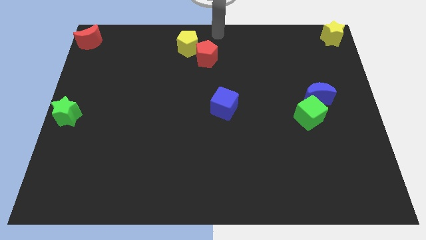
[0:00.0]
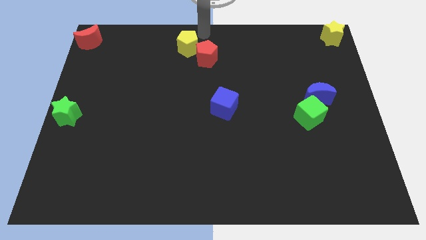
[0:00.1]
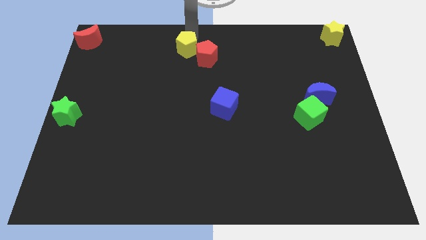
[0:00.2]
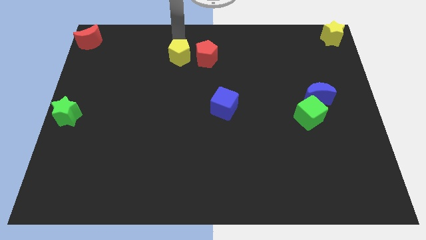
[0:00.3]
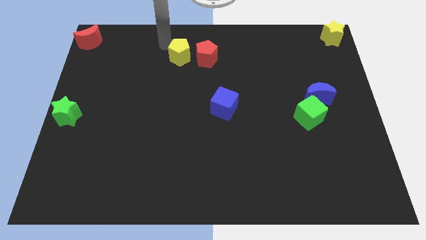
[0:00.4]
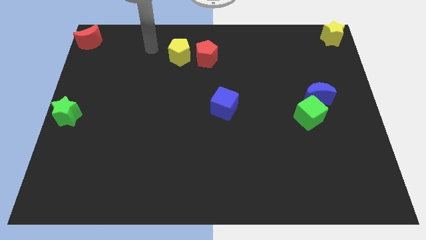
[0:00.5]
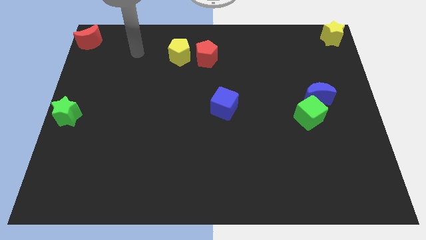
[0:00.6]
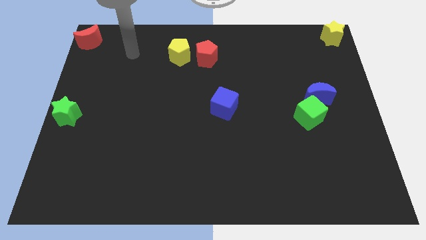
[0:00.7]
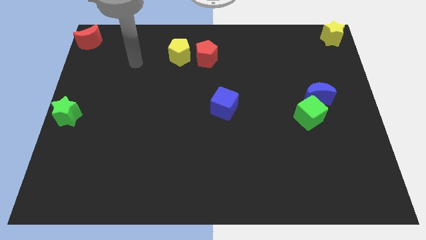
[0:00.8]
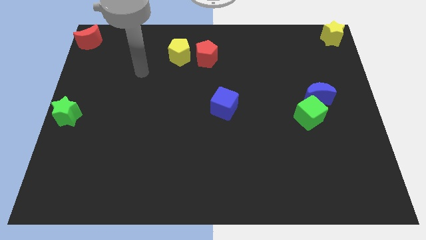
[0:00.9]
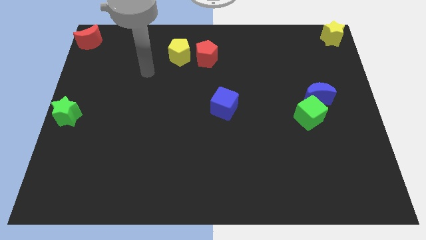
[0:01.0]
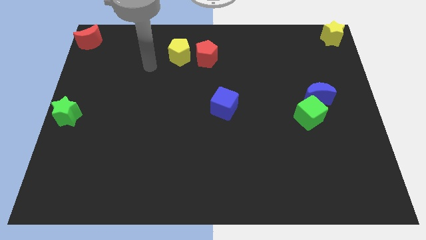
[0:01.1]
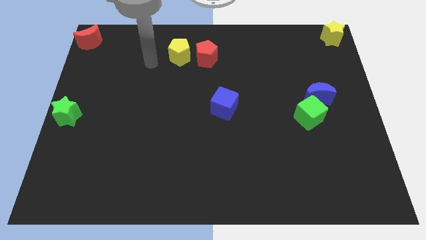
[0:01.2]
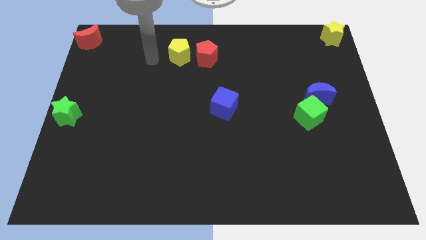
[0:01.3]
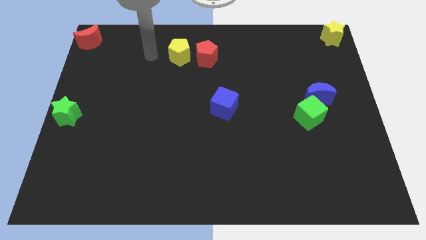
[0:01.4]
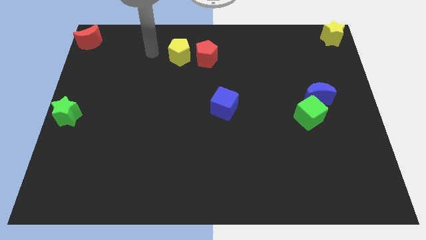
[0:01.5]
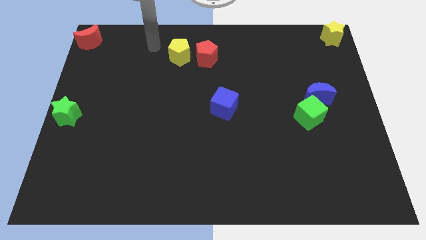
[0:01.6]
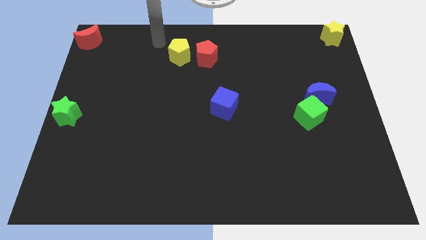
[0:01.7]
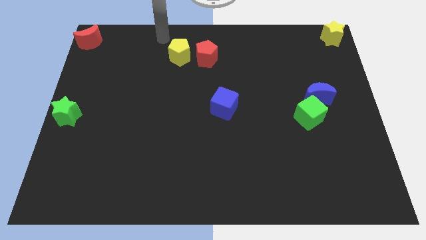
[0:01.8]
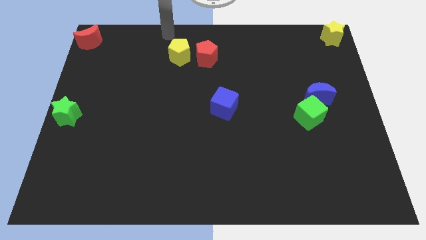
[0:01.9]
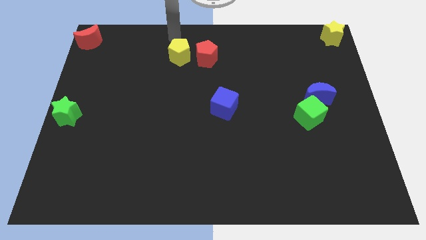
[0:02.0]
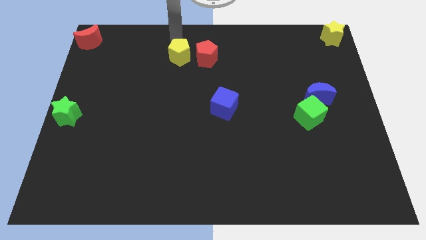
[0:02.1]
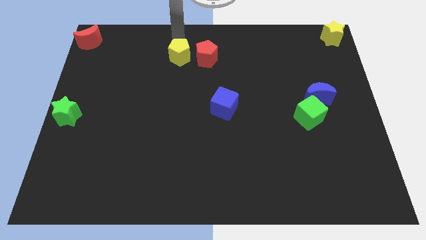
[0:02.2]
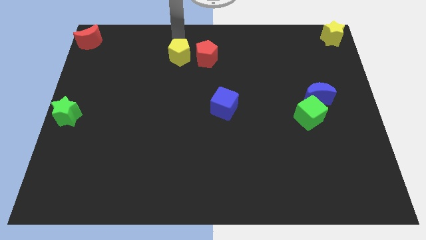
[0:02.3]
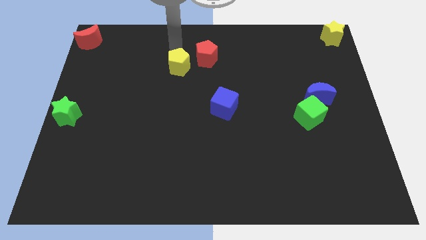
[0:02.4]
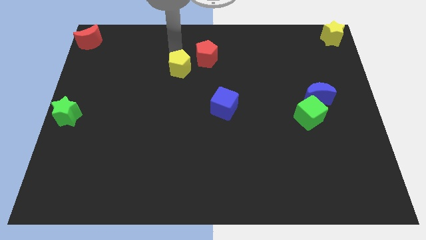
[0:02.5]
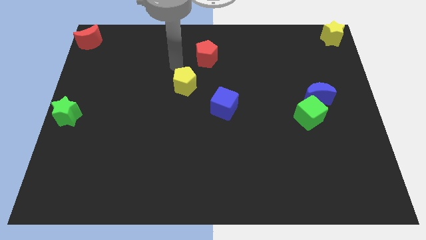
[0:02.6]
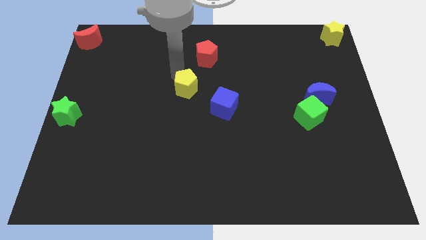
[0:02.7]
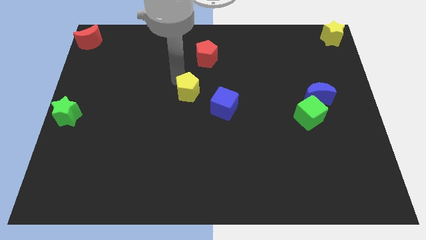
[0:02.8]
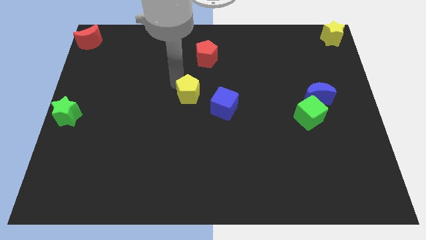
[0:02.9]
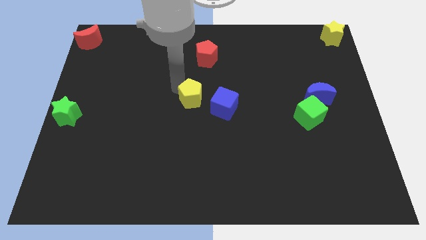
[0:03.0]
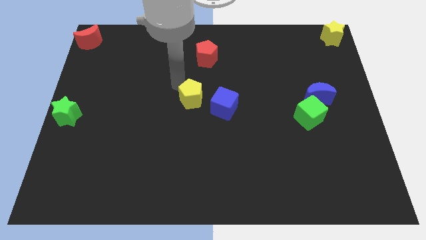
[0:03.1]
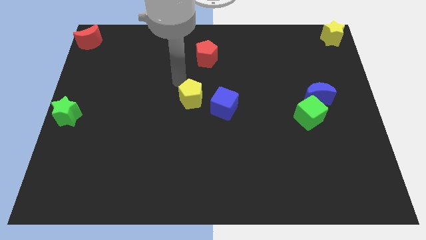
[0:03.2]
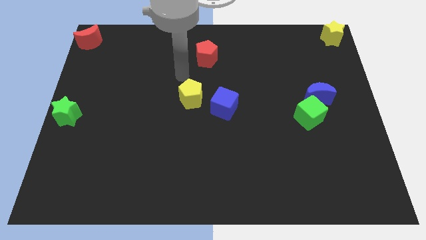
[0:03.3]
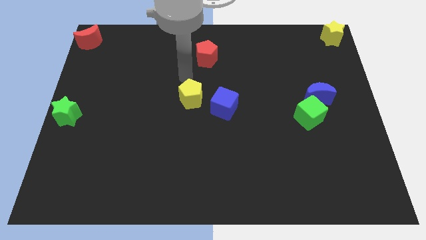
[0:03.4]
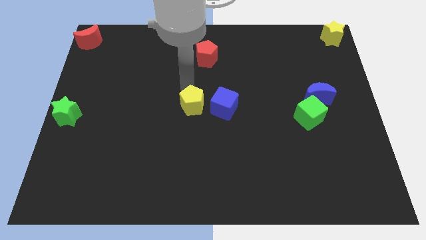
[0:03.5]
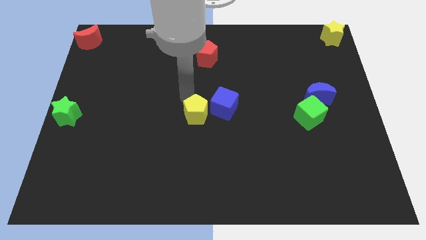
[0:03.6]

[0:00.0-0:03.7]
place the yellow pentagon beside the blue cube

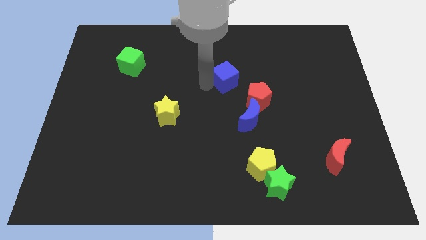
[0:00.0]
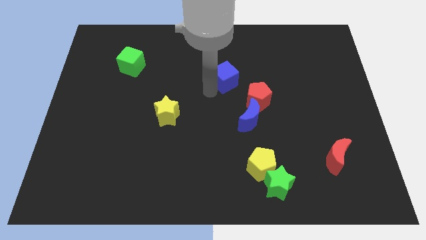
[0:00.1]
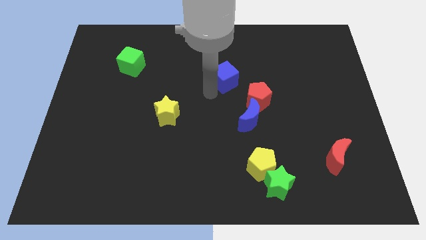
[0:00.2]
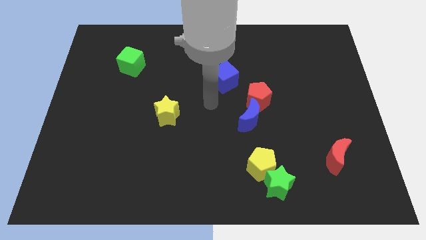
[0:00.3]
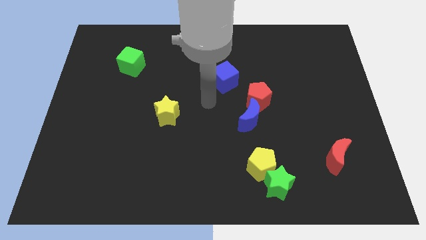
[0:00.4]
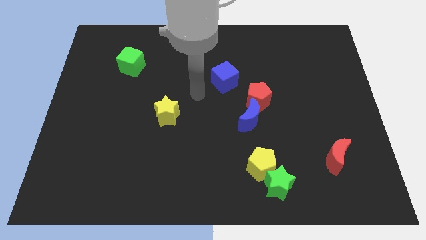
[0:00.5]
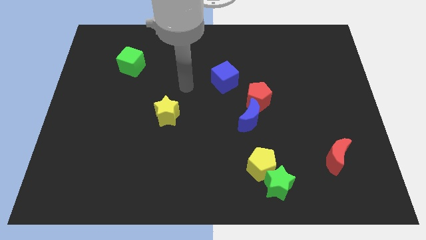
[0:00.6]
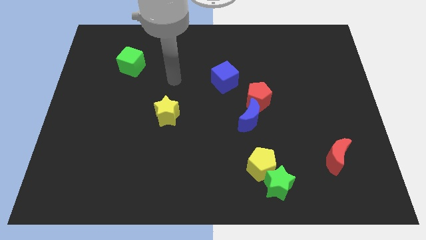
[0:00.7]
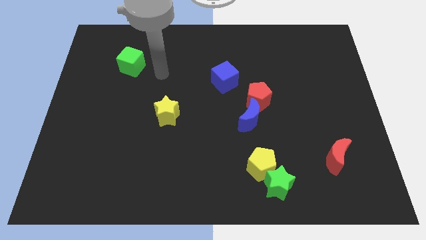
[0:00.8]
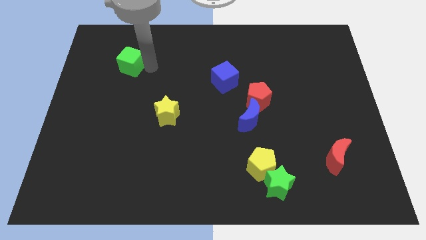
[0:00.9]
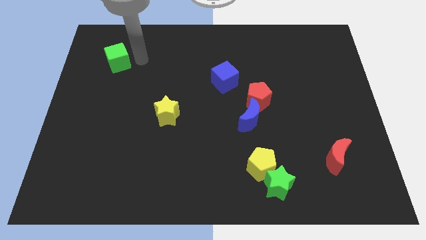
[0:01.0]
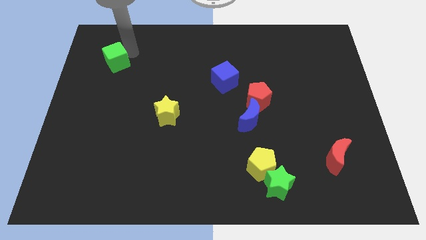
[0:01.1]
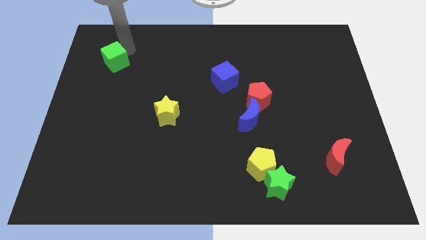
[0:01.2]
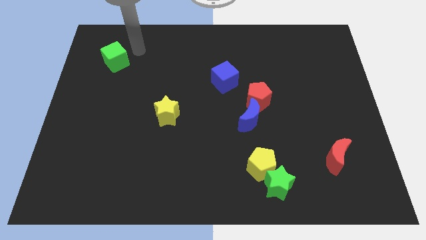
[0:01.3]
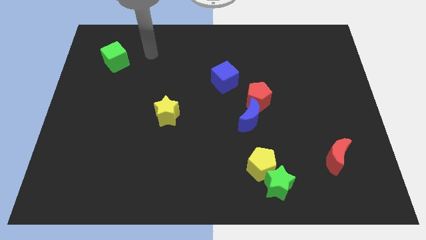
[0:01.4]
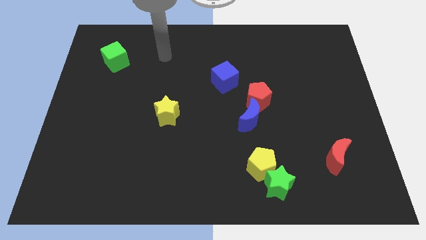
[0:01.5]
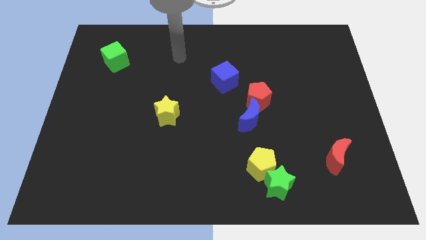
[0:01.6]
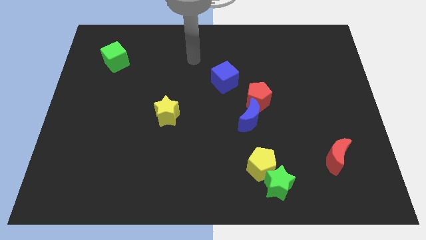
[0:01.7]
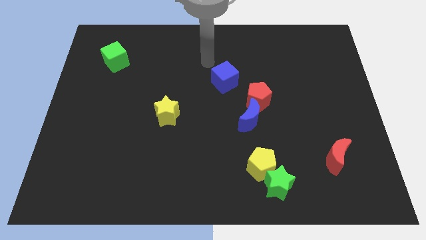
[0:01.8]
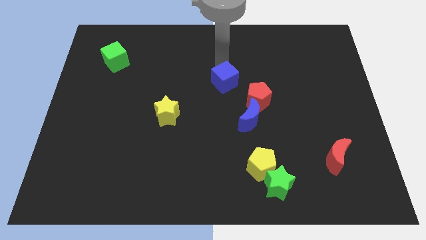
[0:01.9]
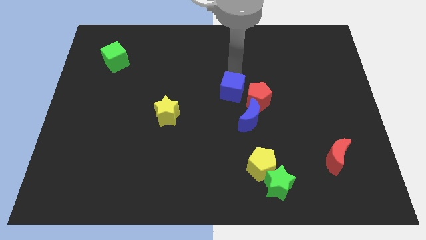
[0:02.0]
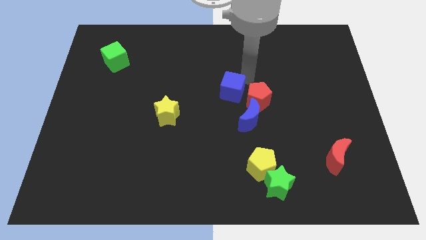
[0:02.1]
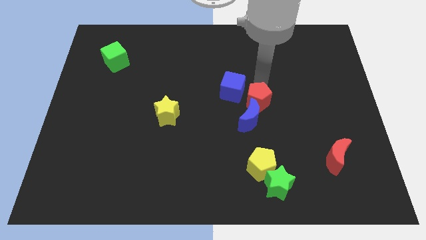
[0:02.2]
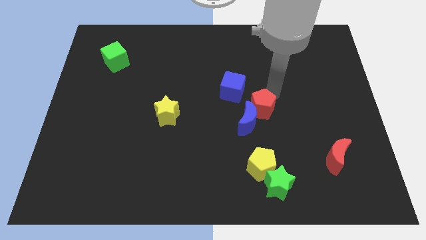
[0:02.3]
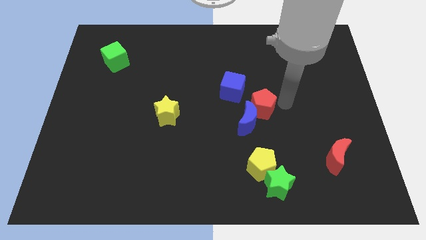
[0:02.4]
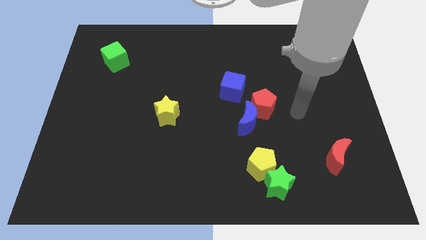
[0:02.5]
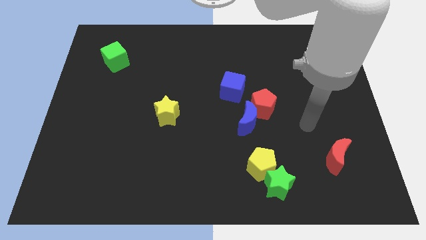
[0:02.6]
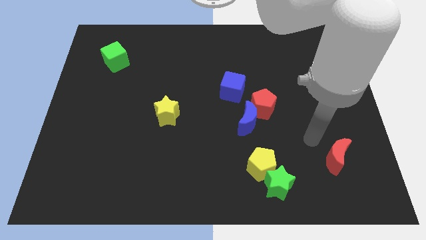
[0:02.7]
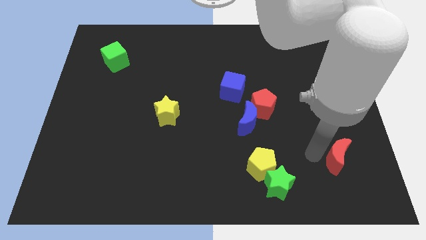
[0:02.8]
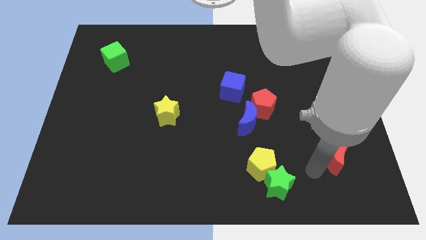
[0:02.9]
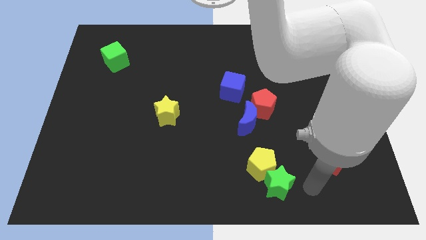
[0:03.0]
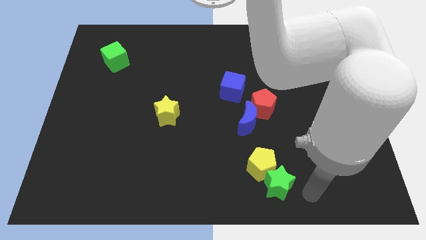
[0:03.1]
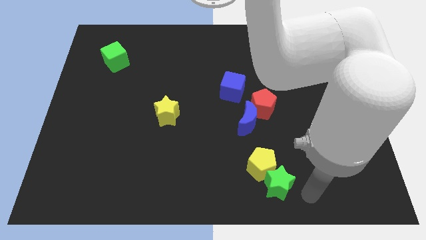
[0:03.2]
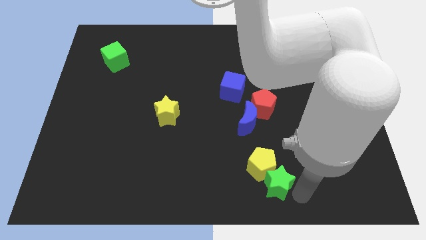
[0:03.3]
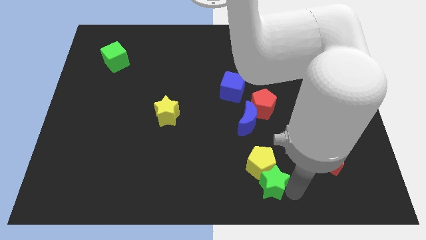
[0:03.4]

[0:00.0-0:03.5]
push green cube to the top left of the board

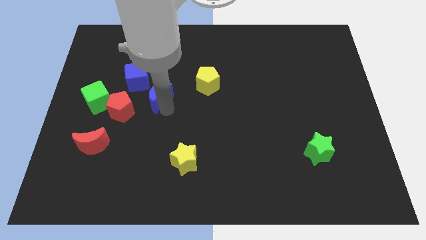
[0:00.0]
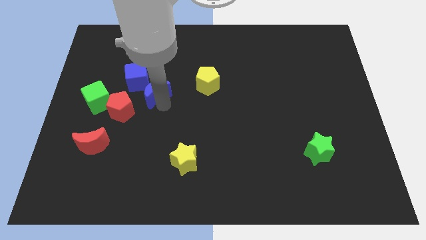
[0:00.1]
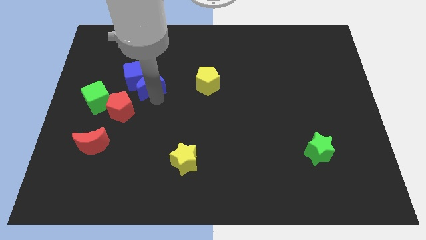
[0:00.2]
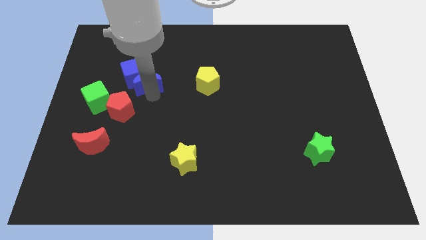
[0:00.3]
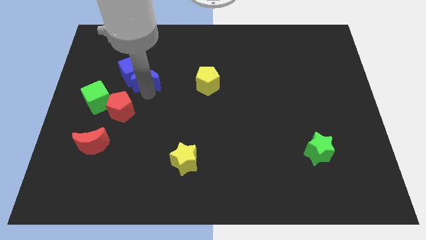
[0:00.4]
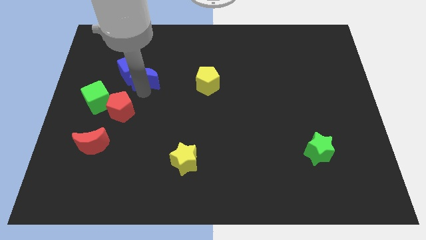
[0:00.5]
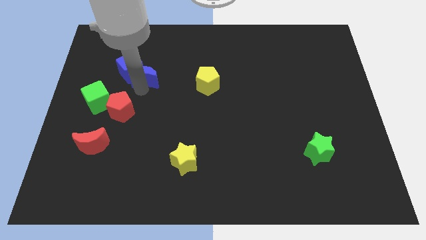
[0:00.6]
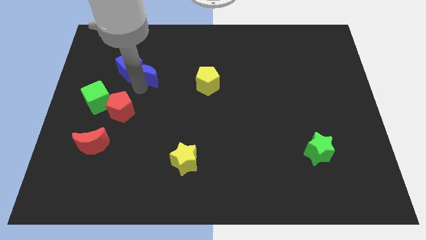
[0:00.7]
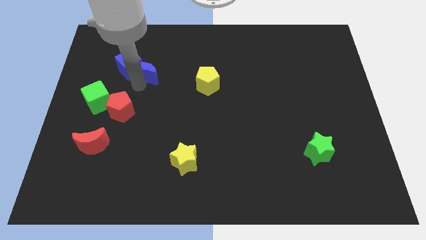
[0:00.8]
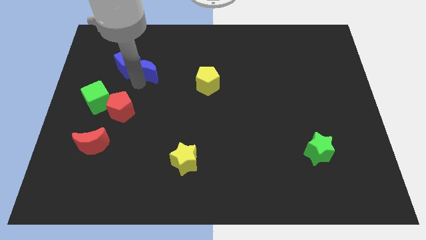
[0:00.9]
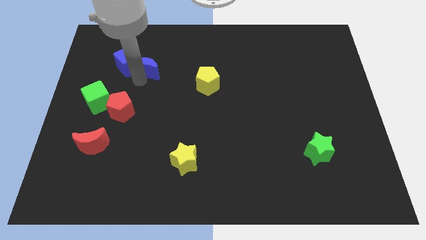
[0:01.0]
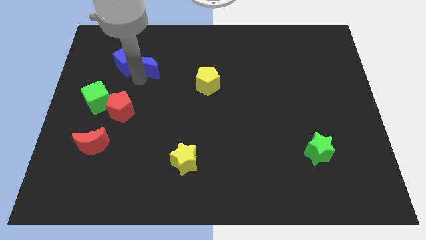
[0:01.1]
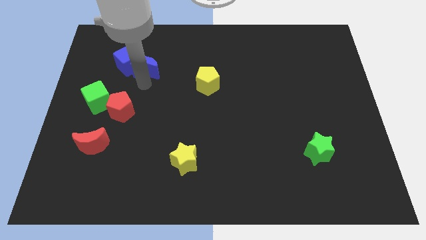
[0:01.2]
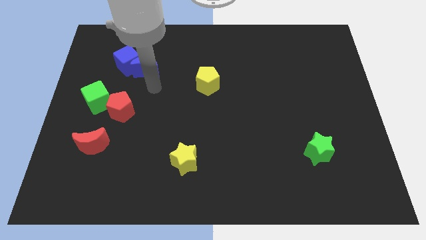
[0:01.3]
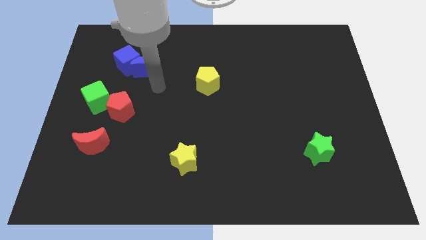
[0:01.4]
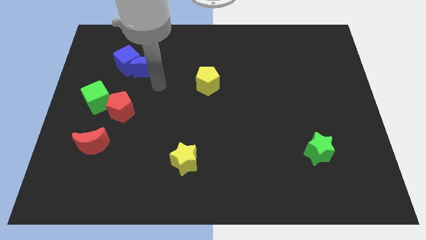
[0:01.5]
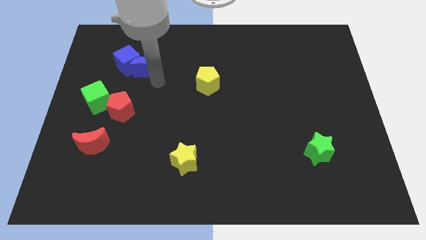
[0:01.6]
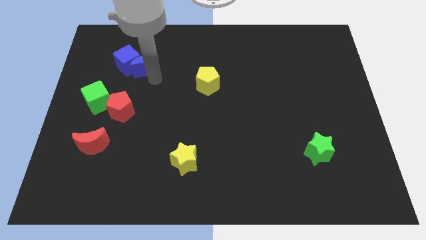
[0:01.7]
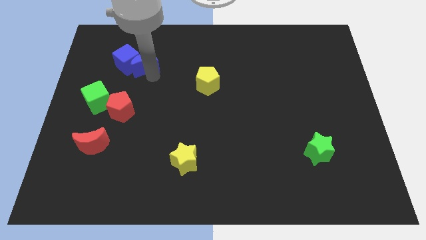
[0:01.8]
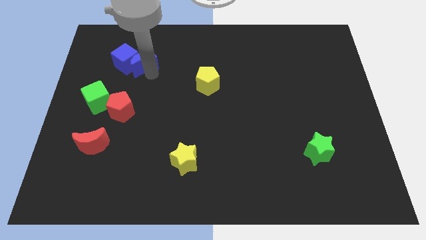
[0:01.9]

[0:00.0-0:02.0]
push blue cube with the blue crescent towards the top left of the board
